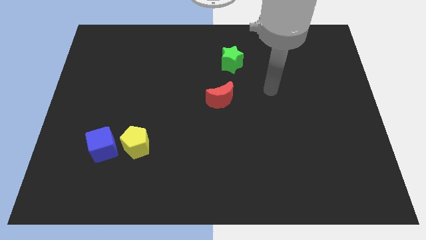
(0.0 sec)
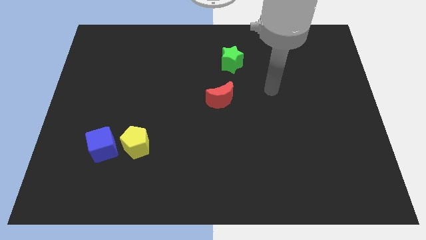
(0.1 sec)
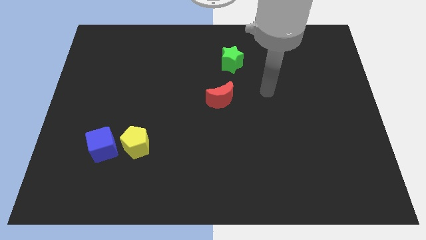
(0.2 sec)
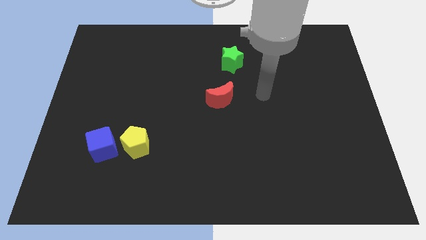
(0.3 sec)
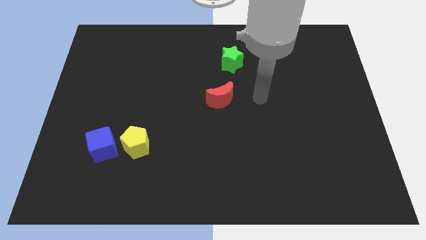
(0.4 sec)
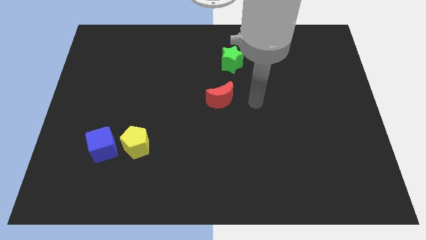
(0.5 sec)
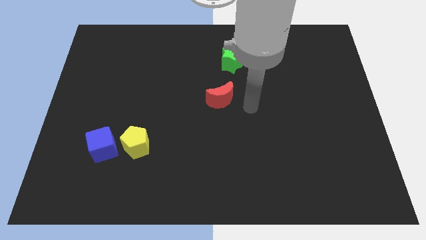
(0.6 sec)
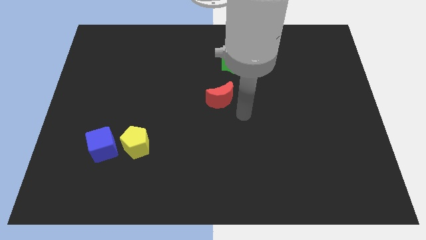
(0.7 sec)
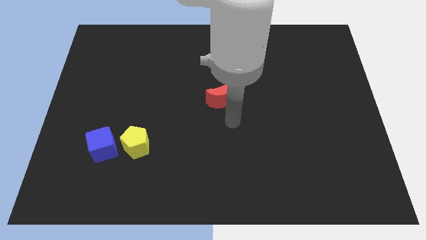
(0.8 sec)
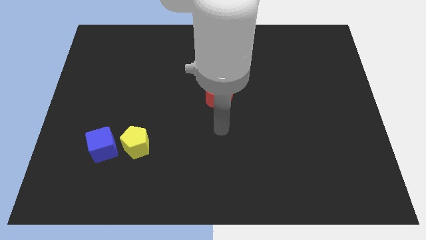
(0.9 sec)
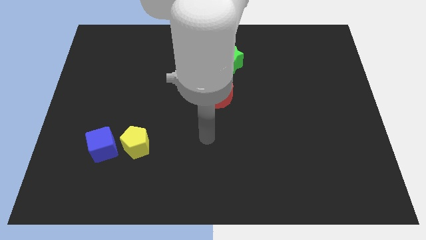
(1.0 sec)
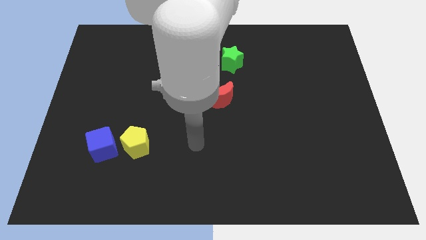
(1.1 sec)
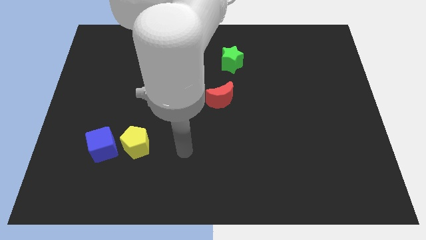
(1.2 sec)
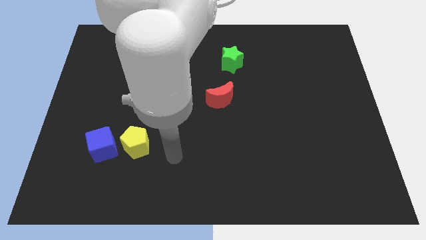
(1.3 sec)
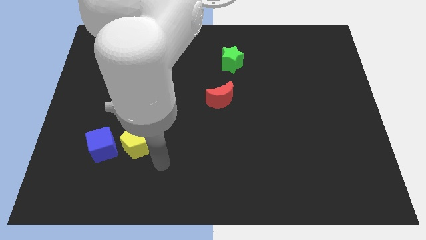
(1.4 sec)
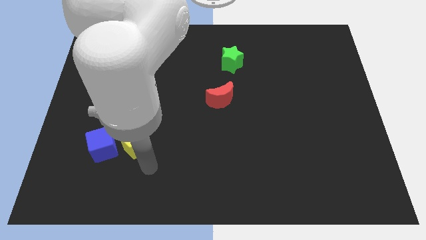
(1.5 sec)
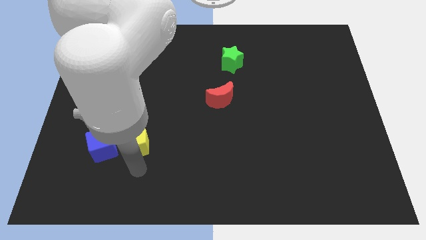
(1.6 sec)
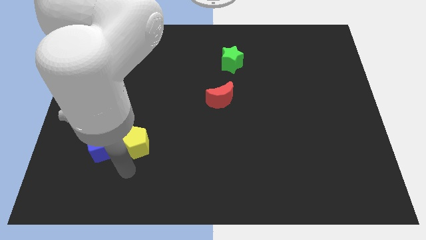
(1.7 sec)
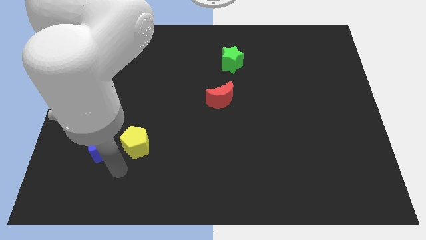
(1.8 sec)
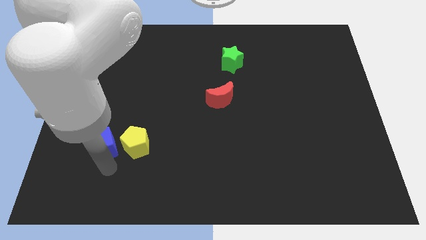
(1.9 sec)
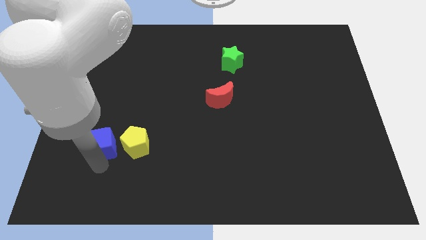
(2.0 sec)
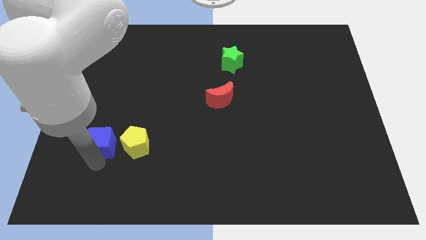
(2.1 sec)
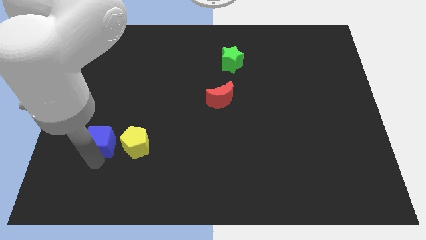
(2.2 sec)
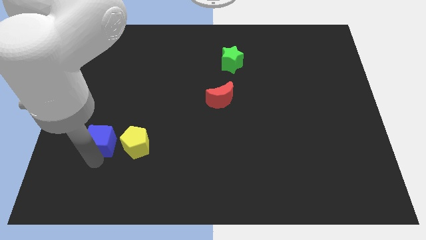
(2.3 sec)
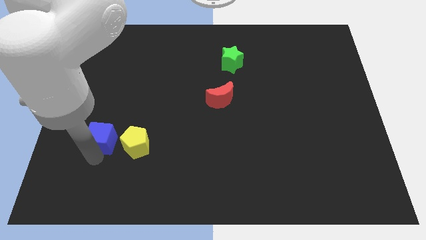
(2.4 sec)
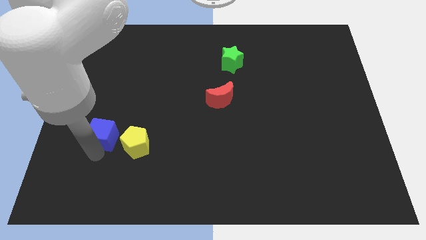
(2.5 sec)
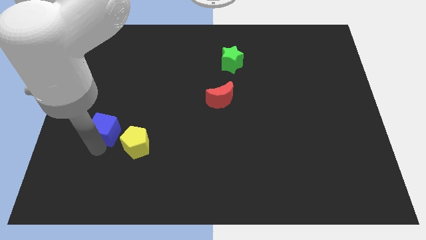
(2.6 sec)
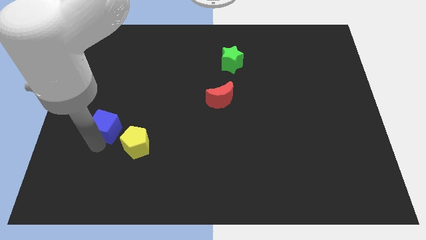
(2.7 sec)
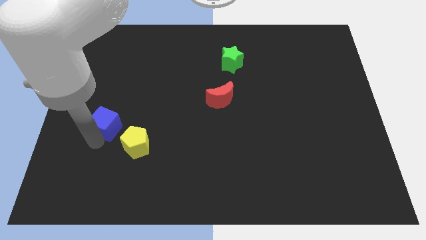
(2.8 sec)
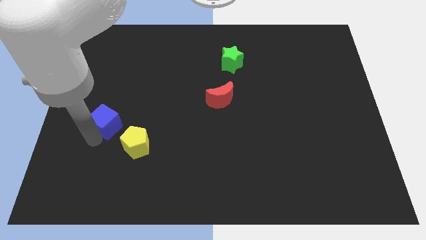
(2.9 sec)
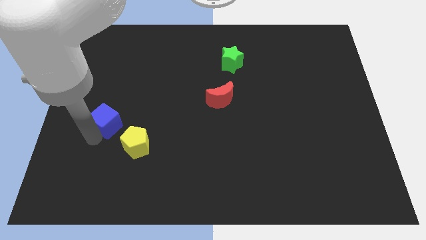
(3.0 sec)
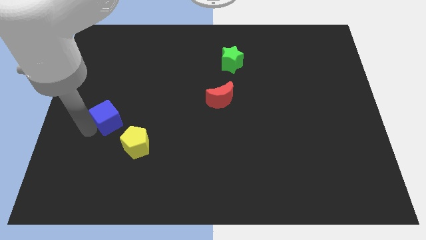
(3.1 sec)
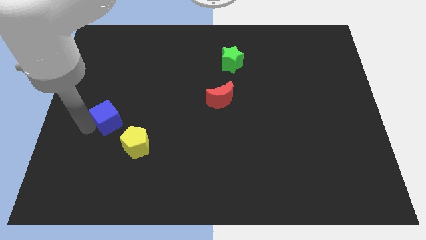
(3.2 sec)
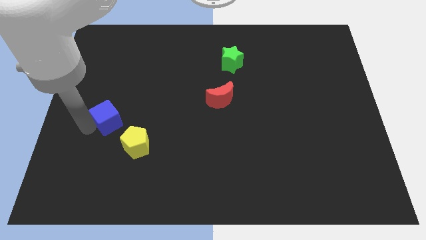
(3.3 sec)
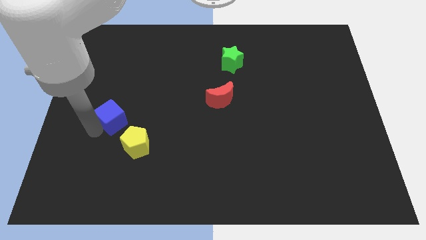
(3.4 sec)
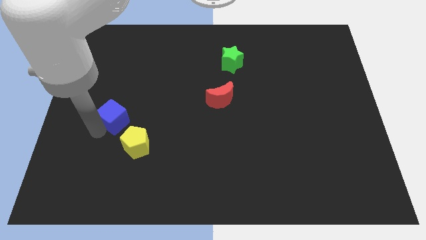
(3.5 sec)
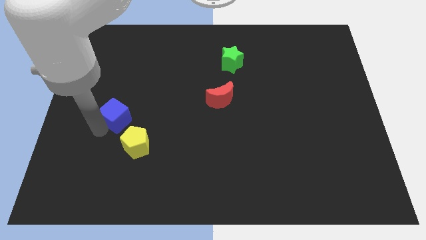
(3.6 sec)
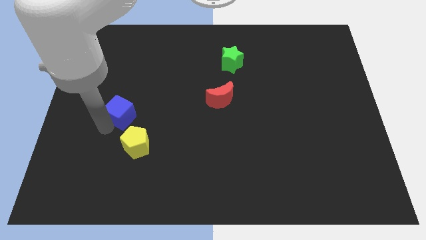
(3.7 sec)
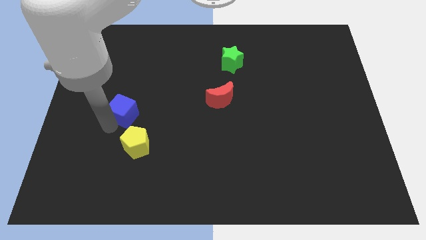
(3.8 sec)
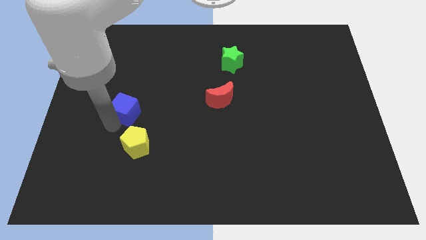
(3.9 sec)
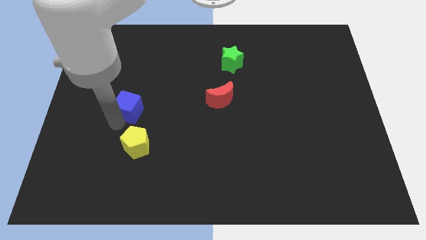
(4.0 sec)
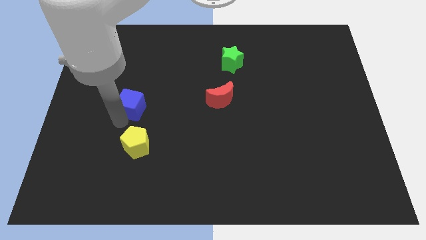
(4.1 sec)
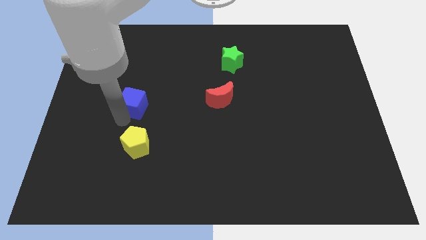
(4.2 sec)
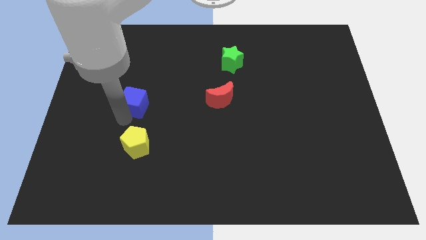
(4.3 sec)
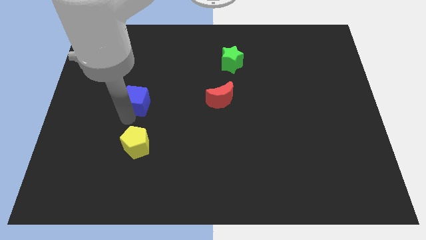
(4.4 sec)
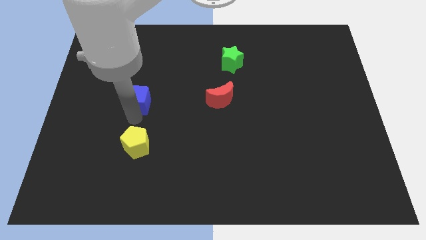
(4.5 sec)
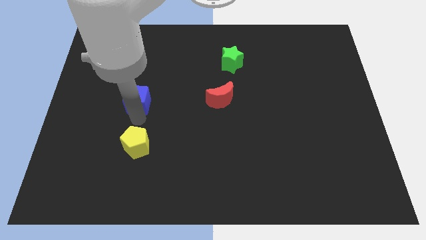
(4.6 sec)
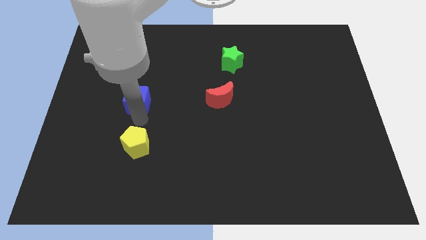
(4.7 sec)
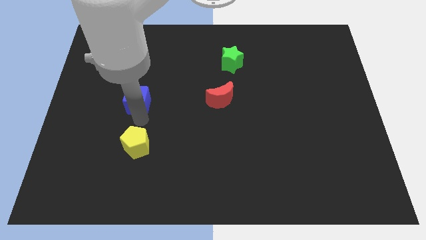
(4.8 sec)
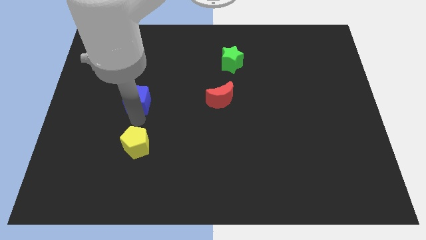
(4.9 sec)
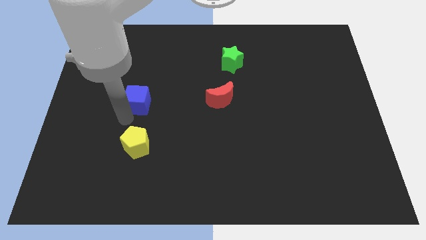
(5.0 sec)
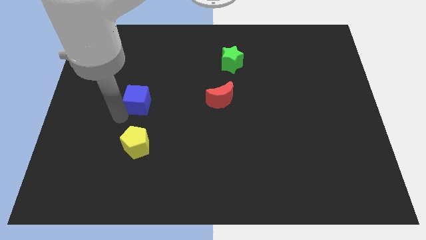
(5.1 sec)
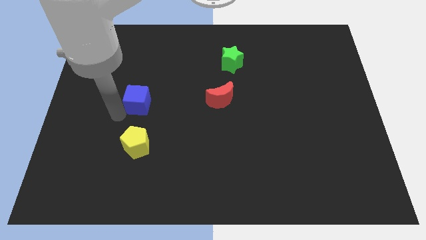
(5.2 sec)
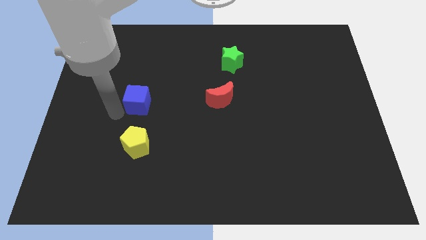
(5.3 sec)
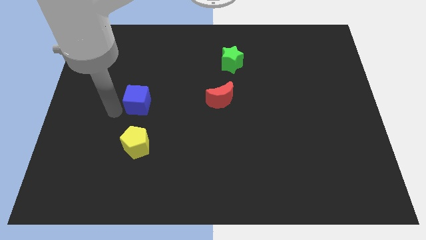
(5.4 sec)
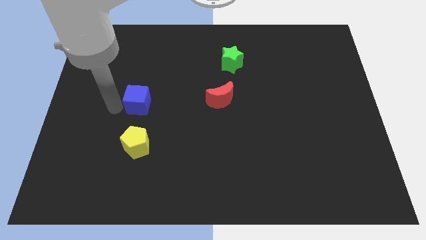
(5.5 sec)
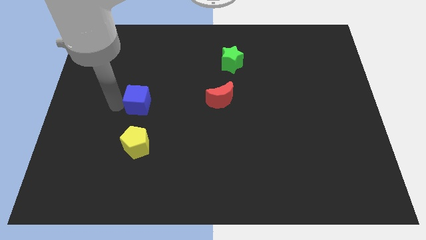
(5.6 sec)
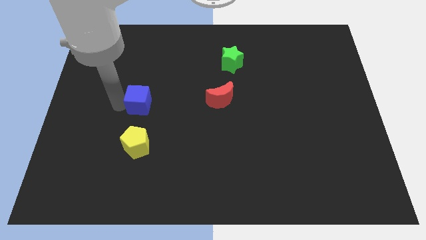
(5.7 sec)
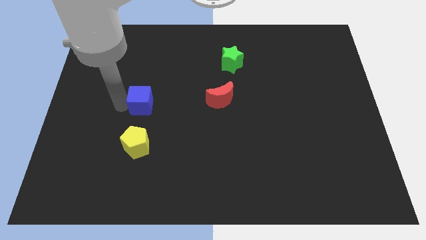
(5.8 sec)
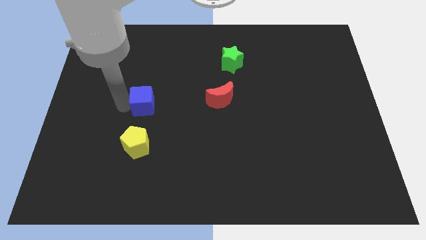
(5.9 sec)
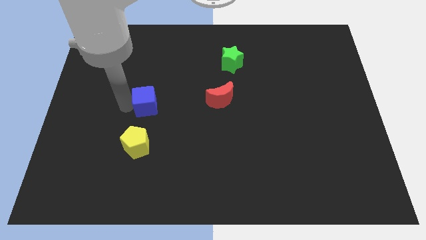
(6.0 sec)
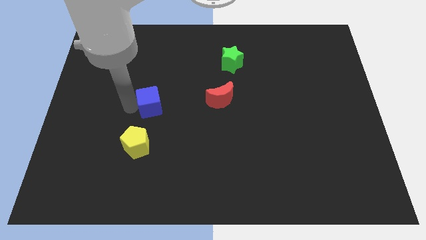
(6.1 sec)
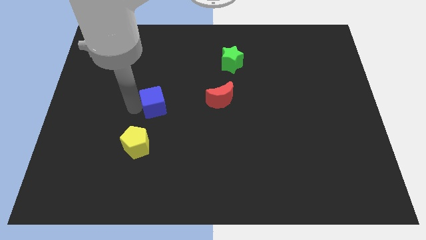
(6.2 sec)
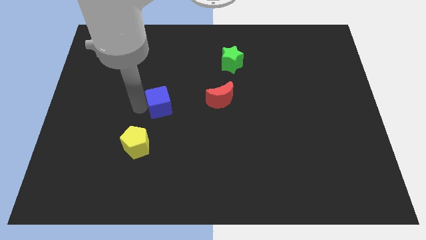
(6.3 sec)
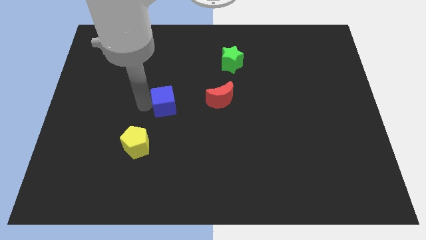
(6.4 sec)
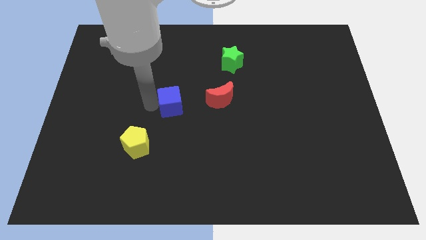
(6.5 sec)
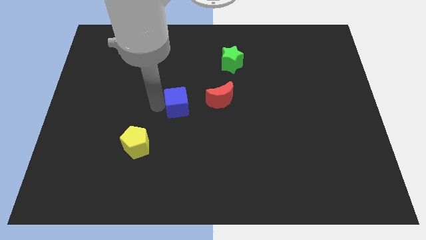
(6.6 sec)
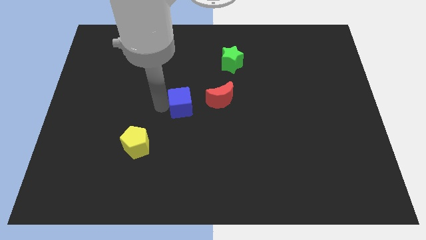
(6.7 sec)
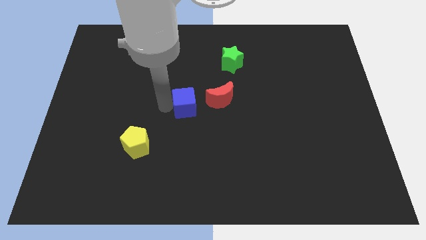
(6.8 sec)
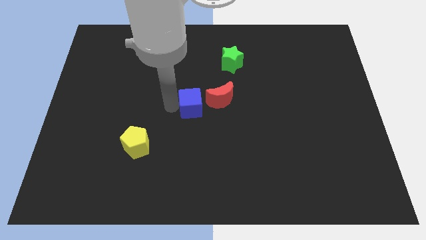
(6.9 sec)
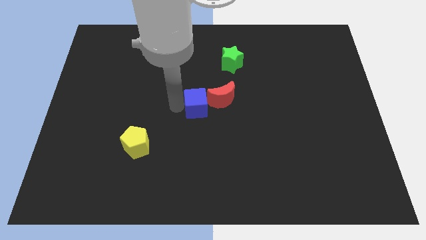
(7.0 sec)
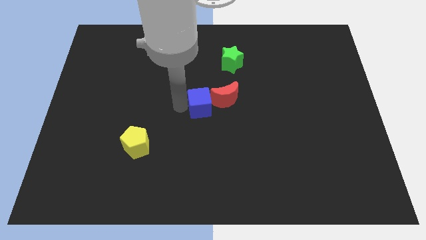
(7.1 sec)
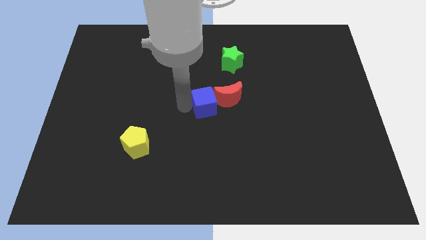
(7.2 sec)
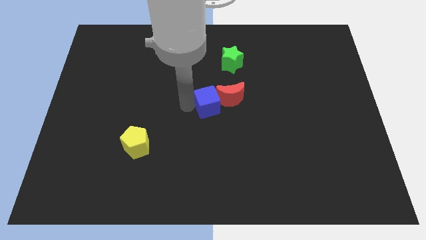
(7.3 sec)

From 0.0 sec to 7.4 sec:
push the blue block close to the red moon

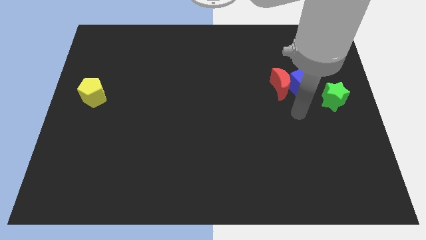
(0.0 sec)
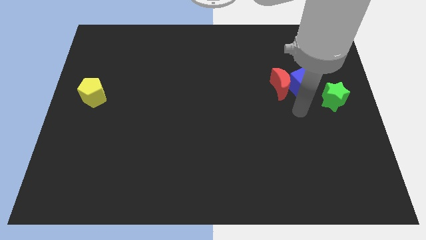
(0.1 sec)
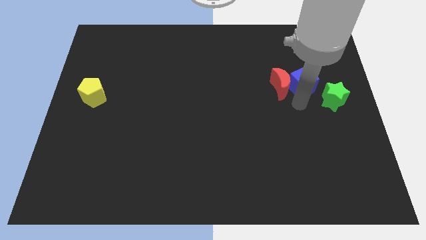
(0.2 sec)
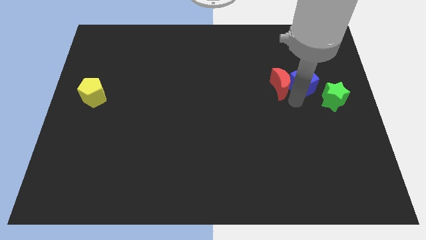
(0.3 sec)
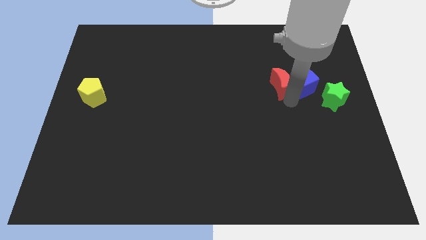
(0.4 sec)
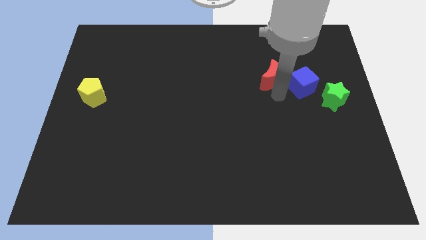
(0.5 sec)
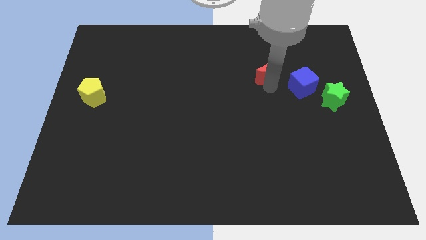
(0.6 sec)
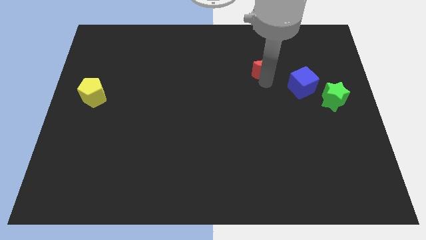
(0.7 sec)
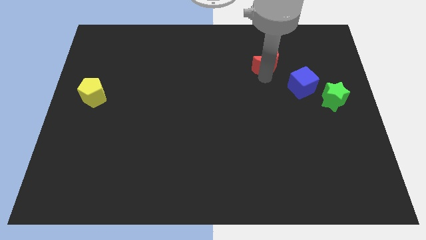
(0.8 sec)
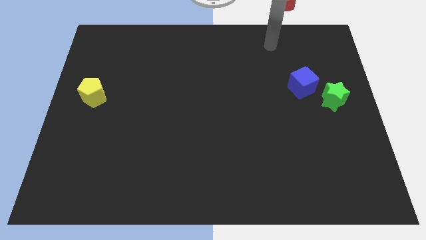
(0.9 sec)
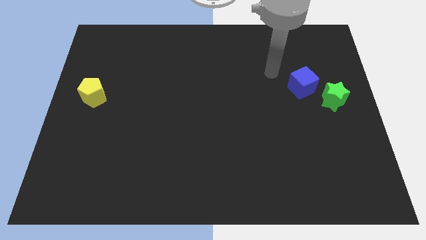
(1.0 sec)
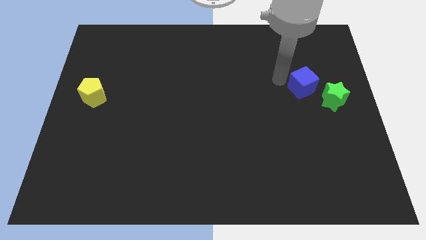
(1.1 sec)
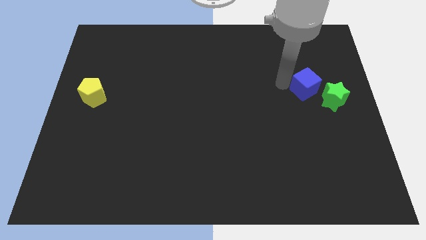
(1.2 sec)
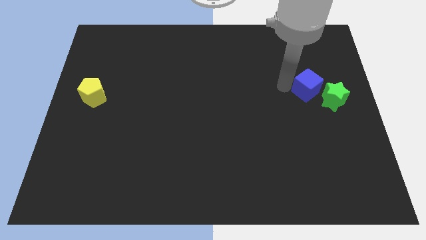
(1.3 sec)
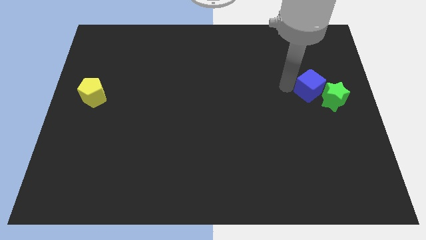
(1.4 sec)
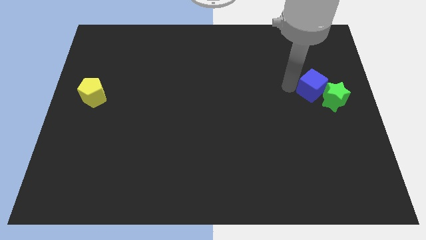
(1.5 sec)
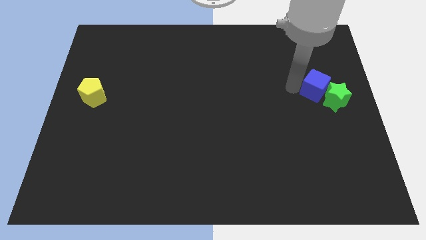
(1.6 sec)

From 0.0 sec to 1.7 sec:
move the blue cube close to the star
